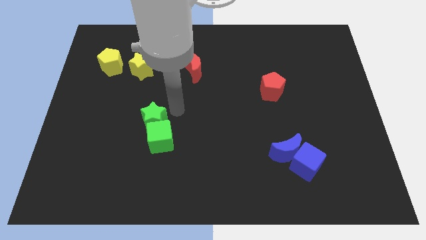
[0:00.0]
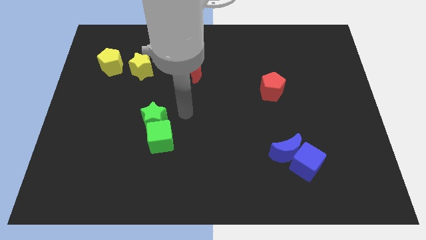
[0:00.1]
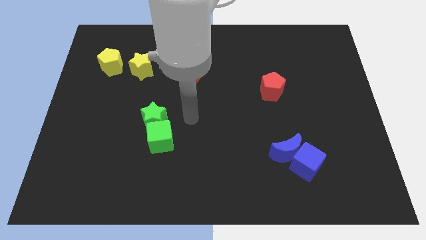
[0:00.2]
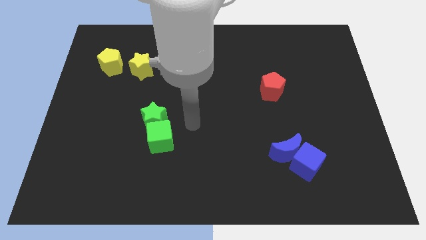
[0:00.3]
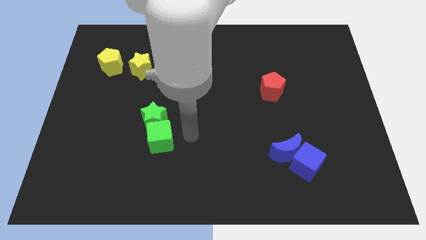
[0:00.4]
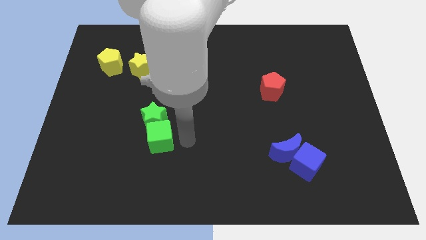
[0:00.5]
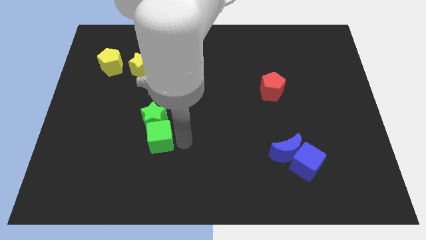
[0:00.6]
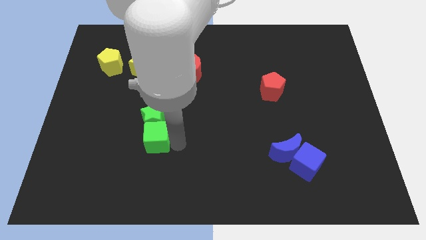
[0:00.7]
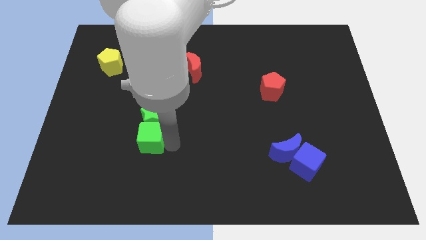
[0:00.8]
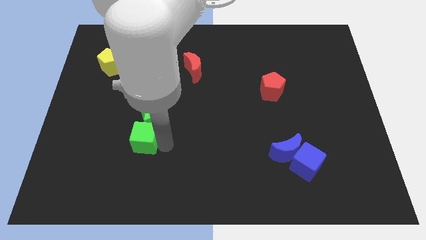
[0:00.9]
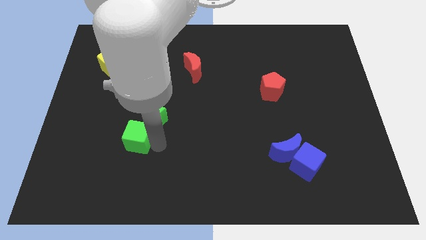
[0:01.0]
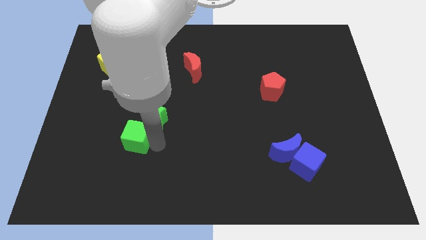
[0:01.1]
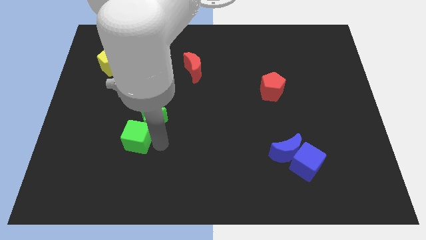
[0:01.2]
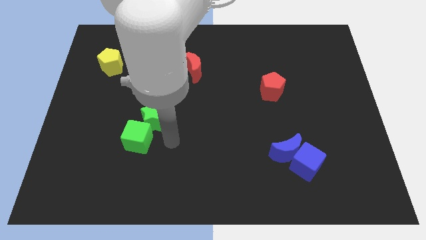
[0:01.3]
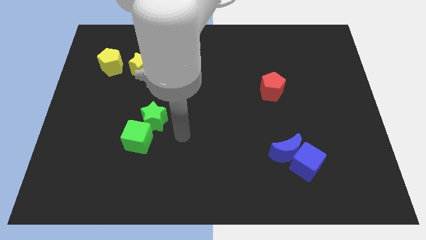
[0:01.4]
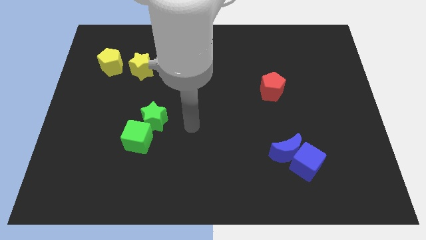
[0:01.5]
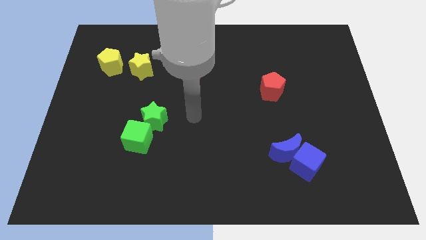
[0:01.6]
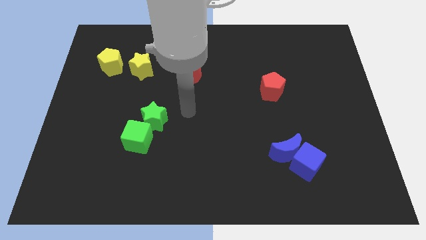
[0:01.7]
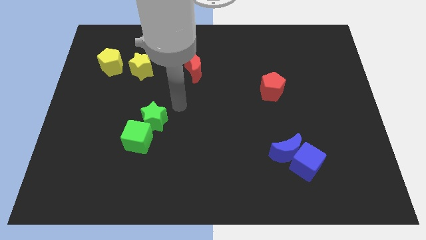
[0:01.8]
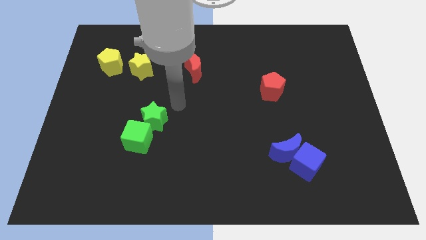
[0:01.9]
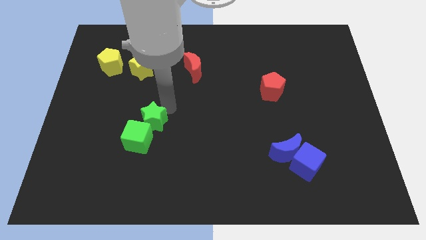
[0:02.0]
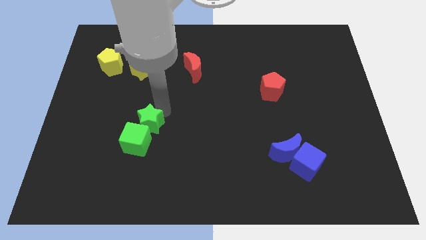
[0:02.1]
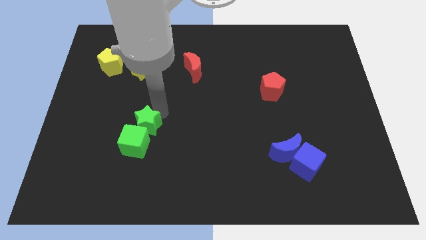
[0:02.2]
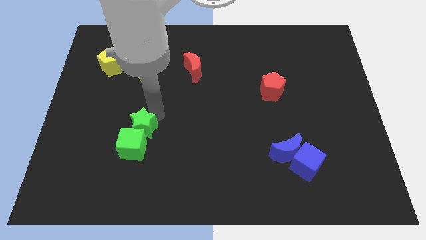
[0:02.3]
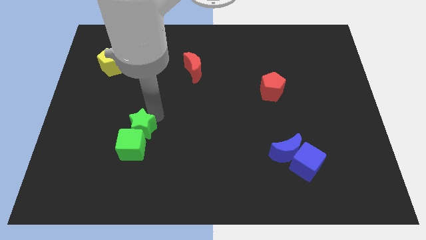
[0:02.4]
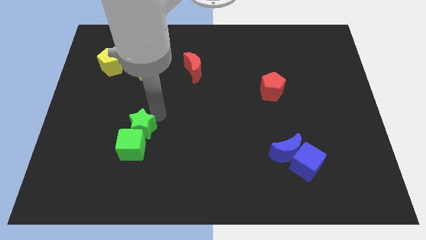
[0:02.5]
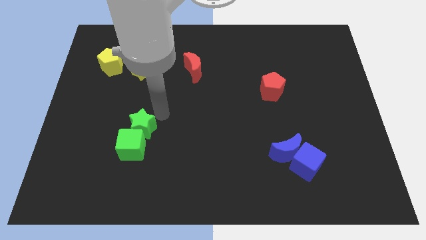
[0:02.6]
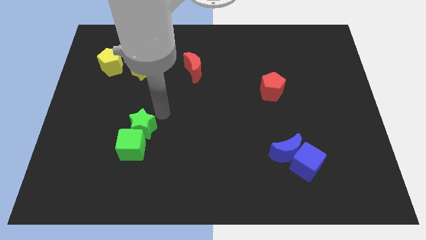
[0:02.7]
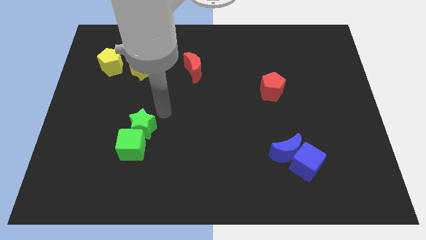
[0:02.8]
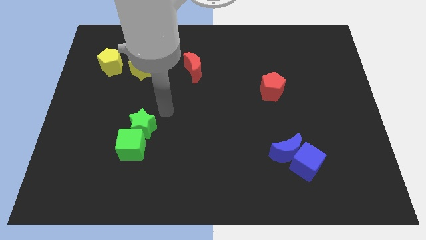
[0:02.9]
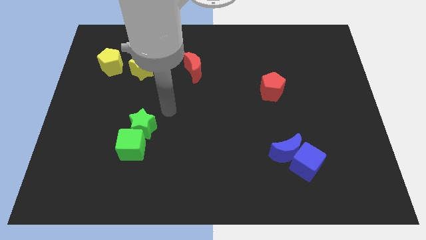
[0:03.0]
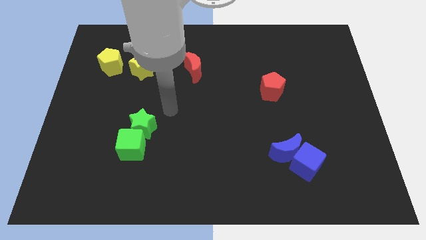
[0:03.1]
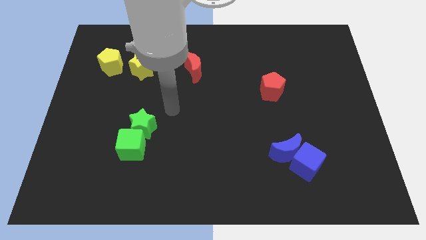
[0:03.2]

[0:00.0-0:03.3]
slightly push the green cube towards the left side of the board

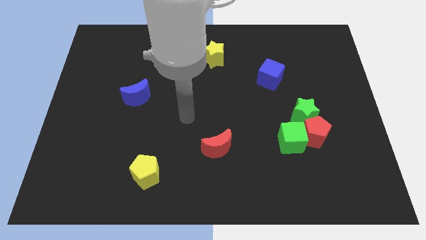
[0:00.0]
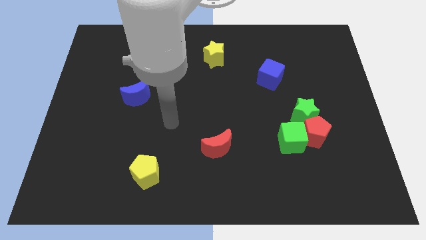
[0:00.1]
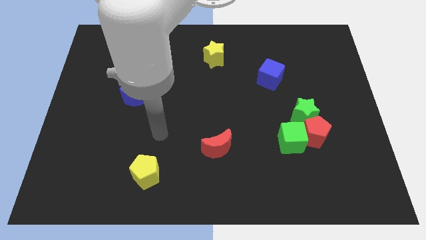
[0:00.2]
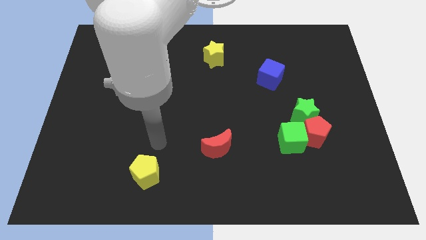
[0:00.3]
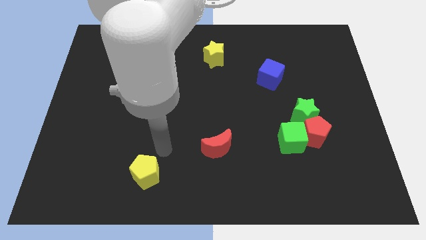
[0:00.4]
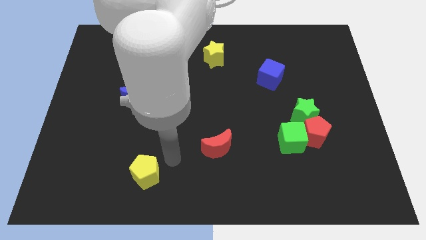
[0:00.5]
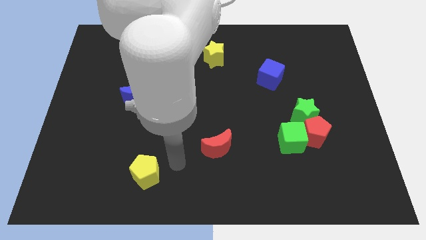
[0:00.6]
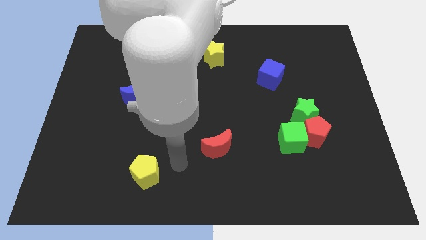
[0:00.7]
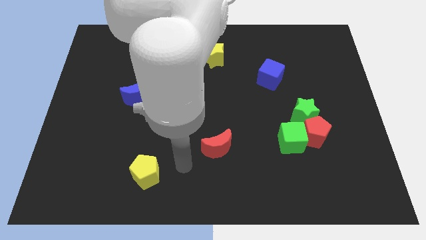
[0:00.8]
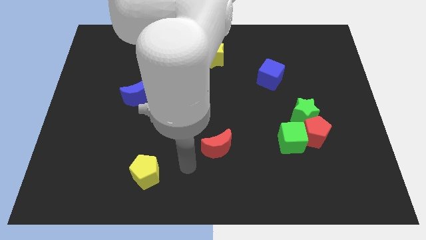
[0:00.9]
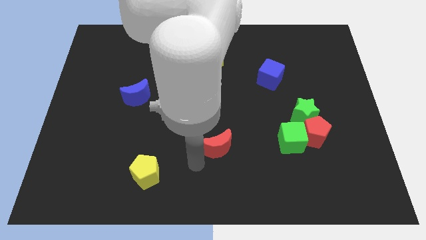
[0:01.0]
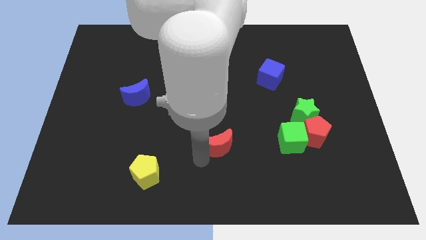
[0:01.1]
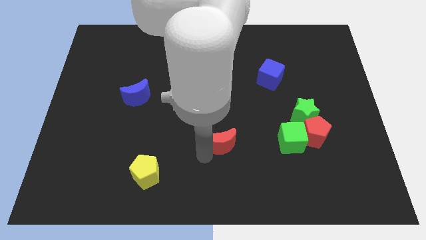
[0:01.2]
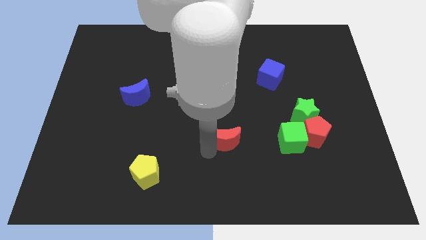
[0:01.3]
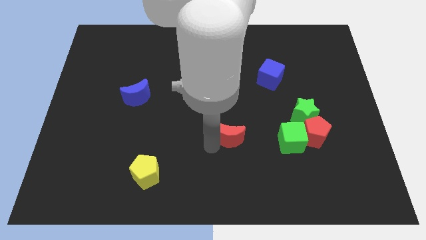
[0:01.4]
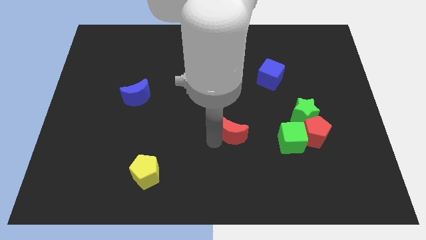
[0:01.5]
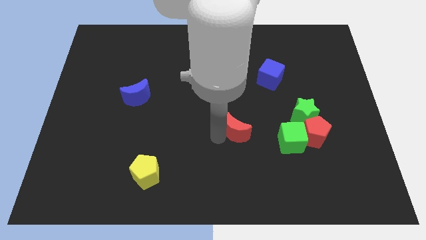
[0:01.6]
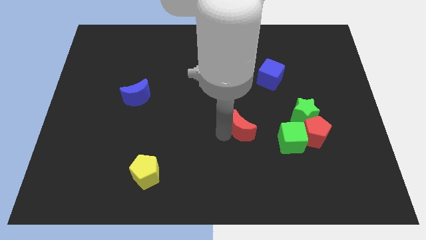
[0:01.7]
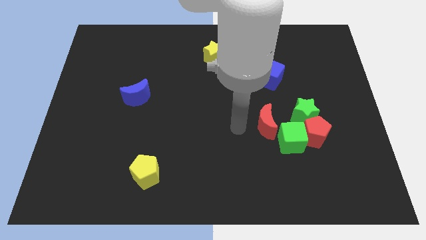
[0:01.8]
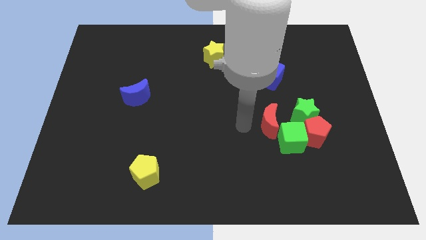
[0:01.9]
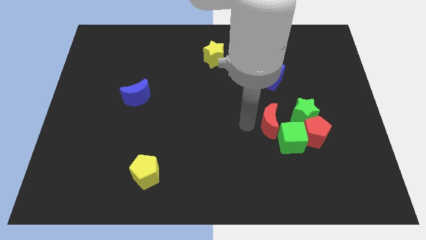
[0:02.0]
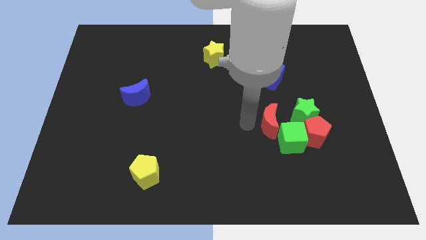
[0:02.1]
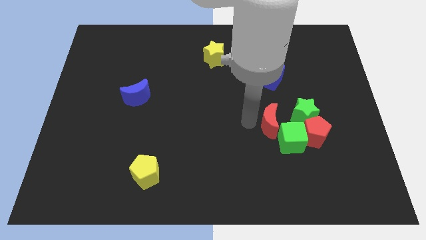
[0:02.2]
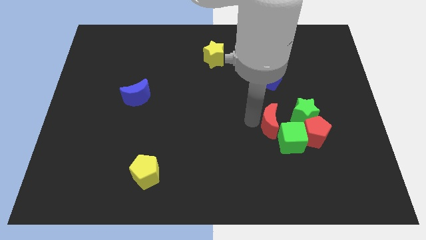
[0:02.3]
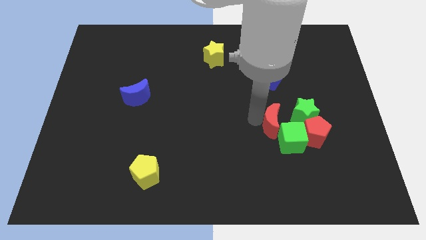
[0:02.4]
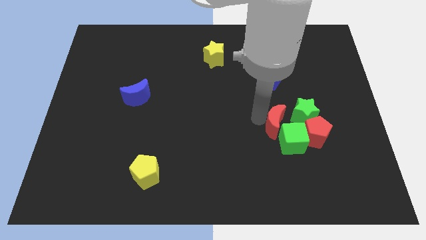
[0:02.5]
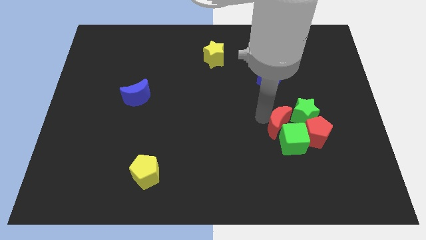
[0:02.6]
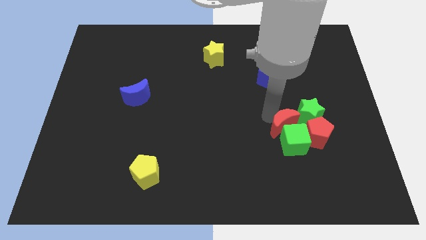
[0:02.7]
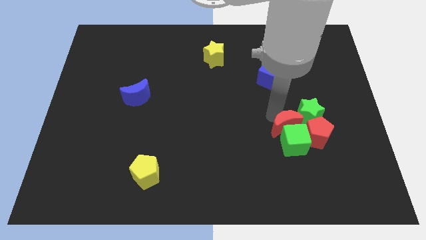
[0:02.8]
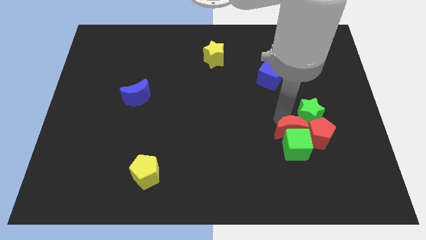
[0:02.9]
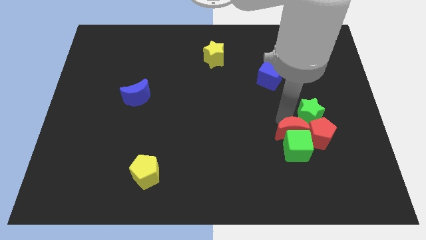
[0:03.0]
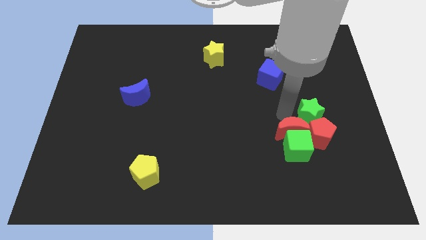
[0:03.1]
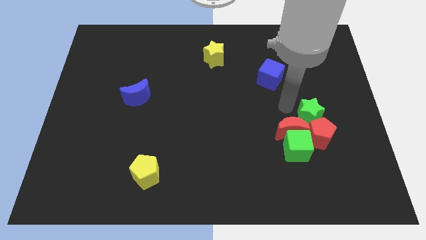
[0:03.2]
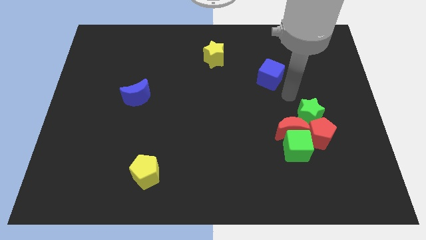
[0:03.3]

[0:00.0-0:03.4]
move the red crescent into the green cube

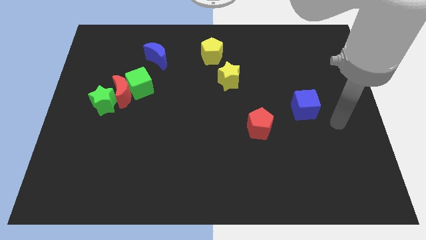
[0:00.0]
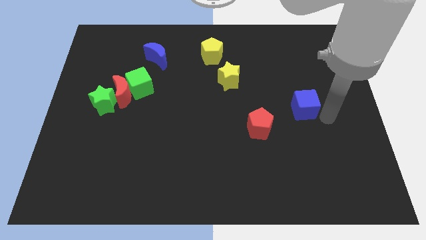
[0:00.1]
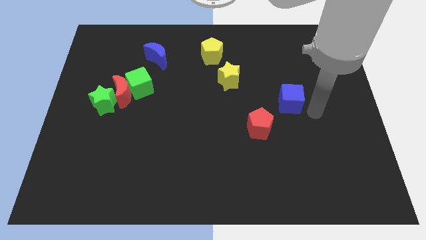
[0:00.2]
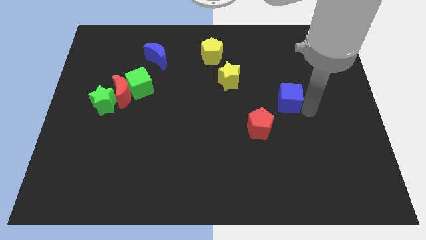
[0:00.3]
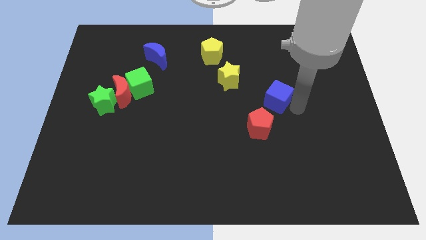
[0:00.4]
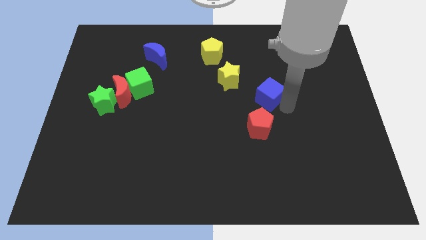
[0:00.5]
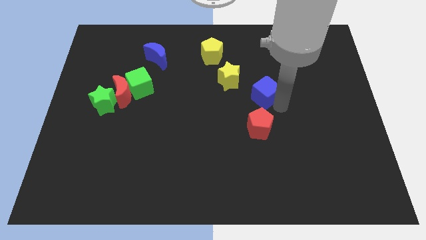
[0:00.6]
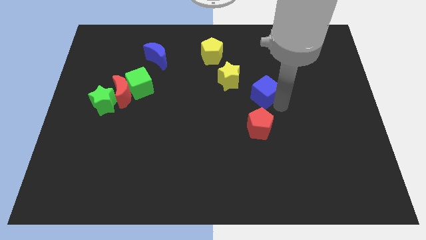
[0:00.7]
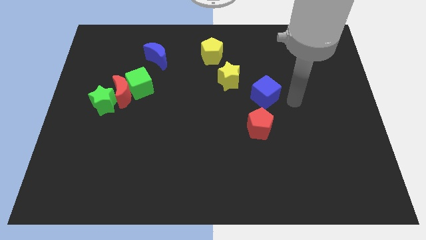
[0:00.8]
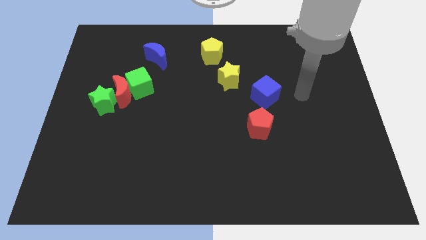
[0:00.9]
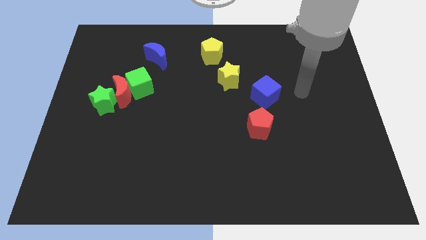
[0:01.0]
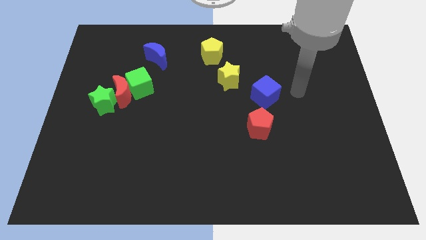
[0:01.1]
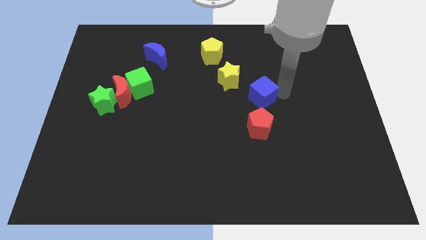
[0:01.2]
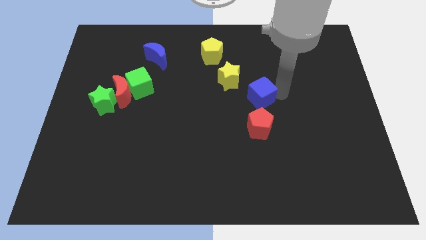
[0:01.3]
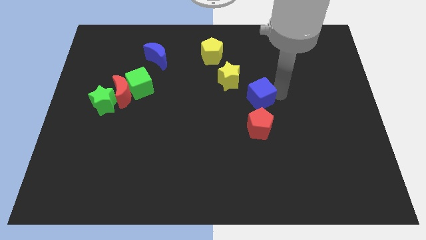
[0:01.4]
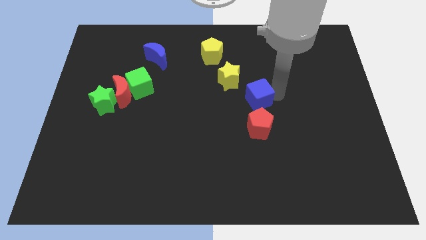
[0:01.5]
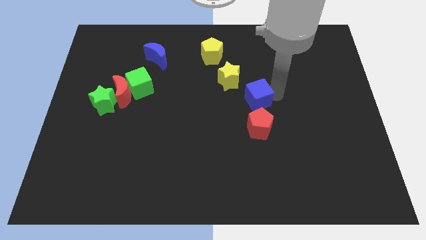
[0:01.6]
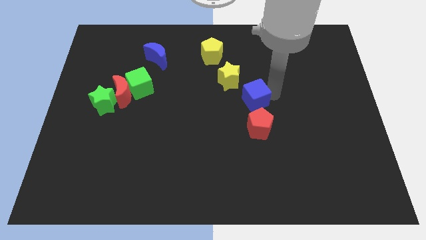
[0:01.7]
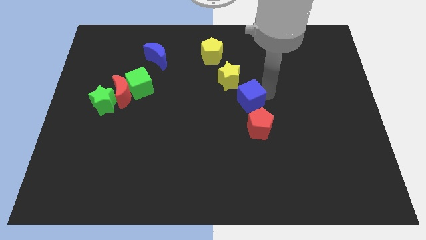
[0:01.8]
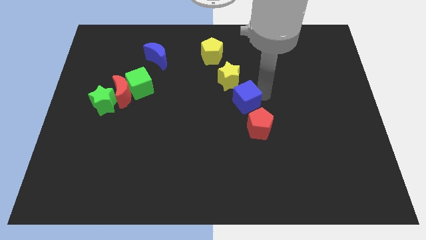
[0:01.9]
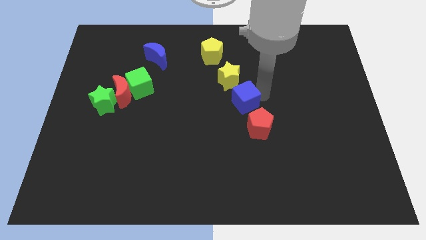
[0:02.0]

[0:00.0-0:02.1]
move the blue cube towards the bottom right of the yellow star

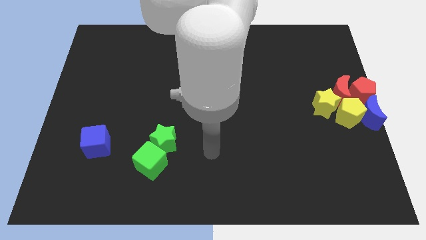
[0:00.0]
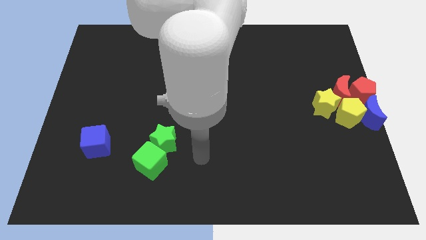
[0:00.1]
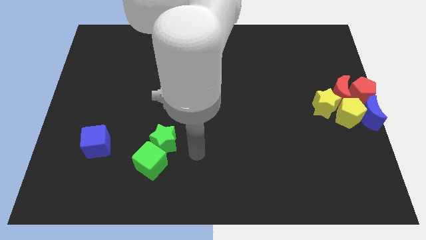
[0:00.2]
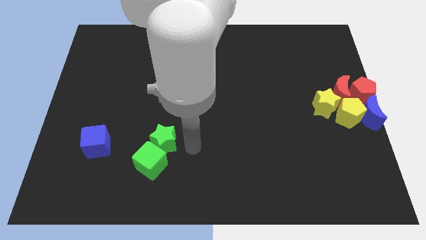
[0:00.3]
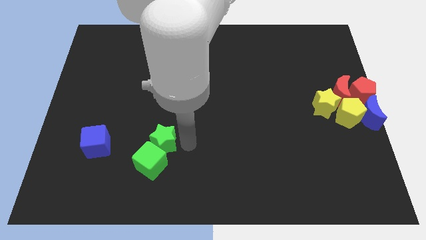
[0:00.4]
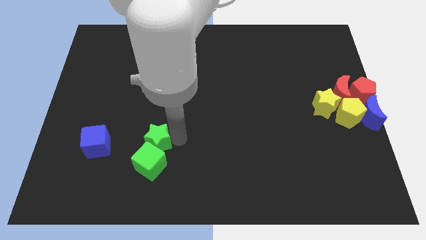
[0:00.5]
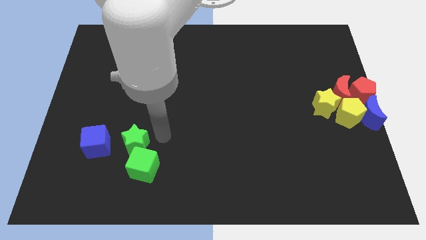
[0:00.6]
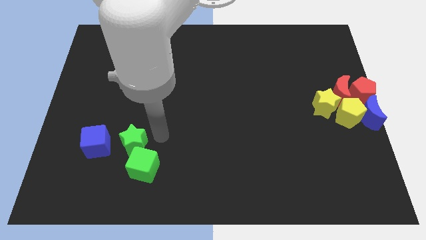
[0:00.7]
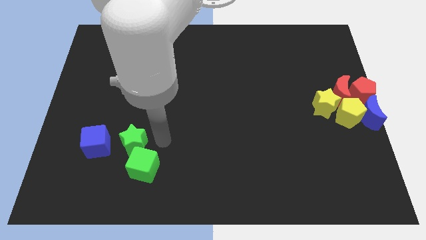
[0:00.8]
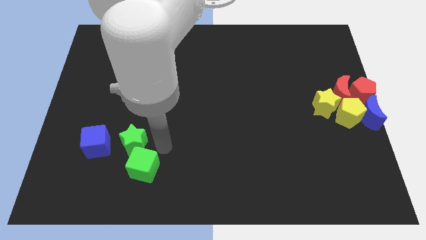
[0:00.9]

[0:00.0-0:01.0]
slide green star slightly to the left
